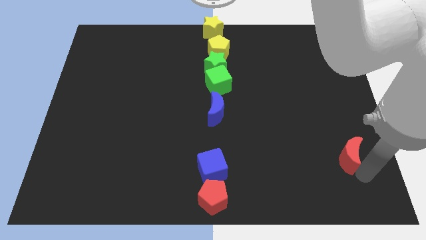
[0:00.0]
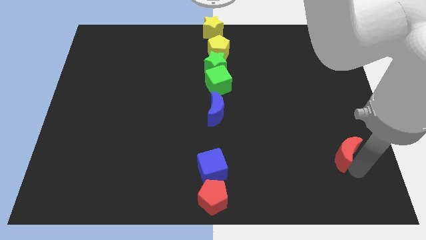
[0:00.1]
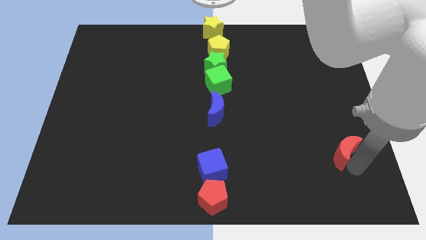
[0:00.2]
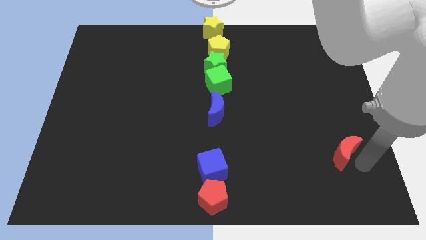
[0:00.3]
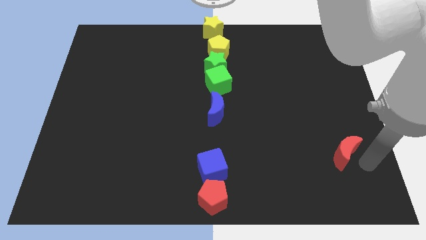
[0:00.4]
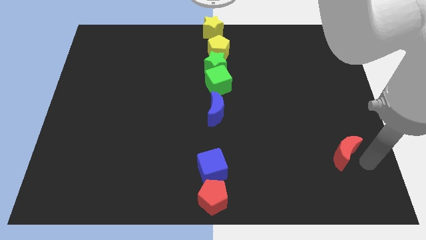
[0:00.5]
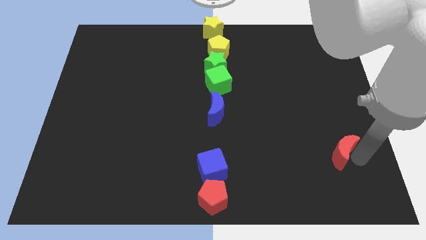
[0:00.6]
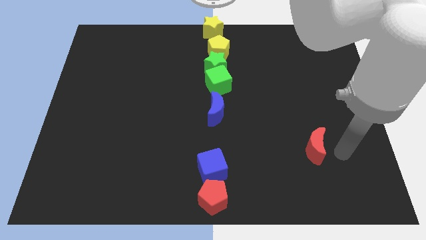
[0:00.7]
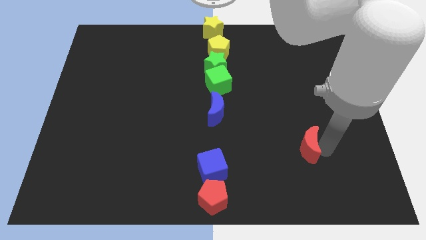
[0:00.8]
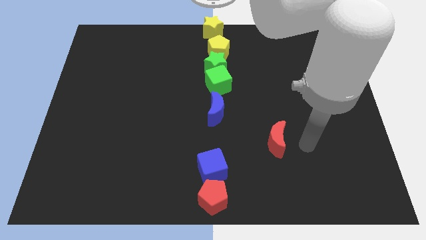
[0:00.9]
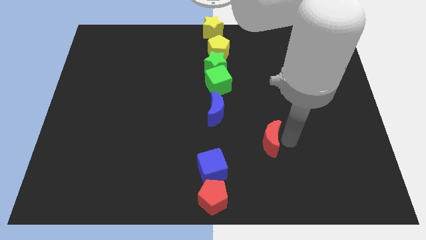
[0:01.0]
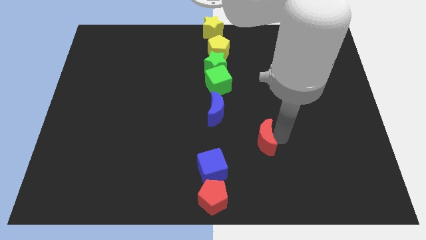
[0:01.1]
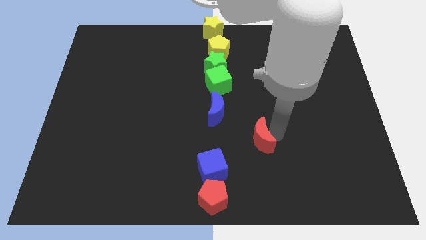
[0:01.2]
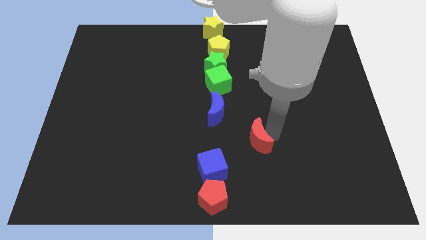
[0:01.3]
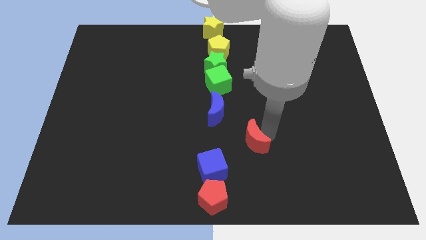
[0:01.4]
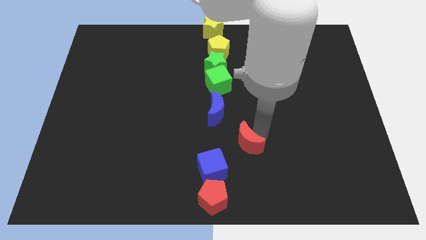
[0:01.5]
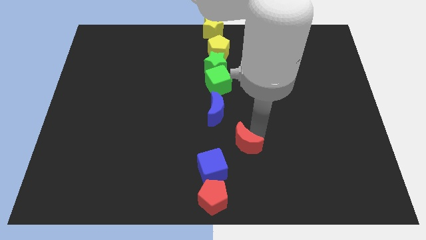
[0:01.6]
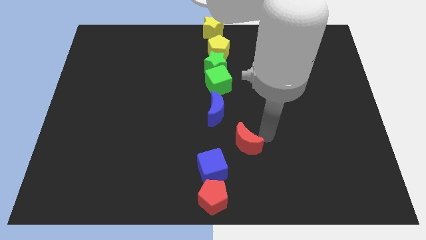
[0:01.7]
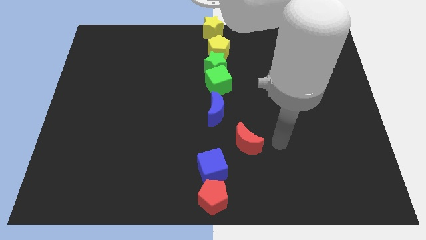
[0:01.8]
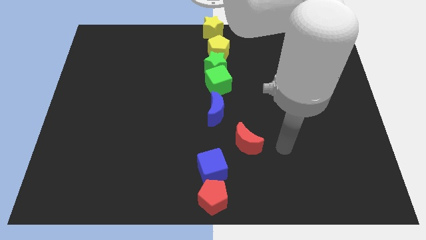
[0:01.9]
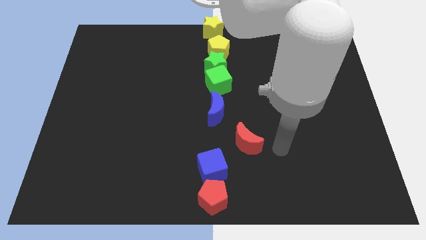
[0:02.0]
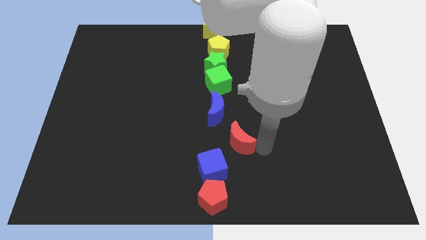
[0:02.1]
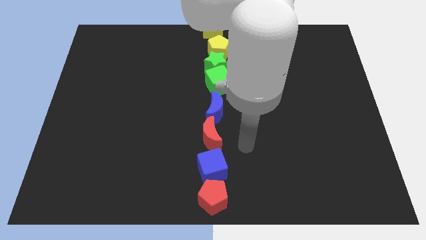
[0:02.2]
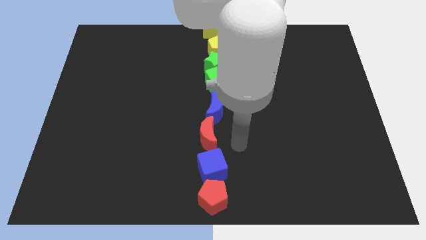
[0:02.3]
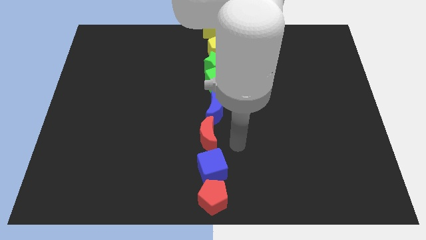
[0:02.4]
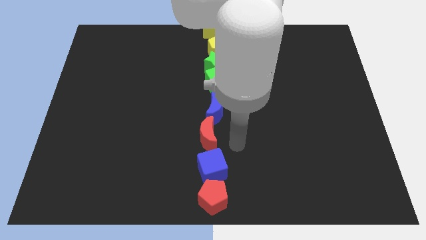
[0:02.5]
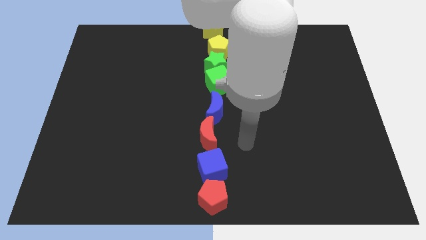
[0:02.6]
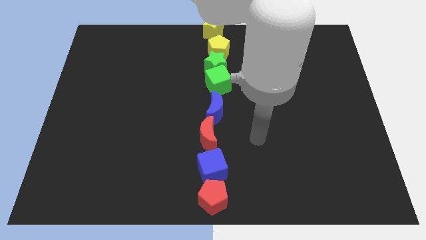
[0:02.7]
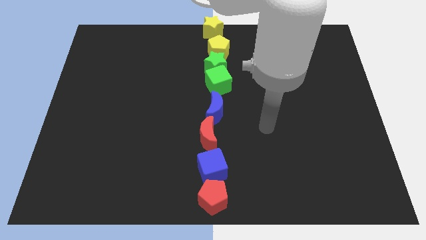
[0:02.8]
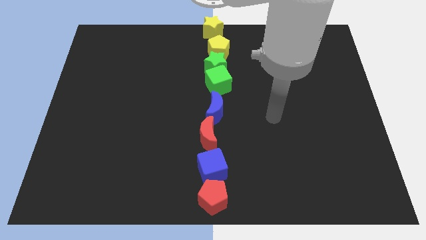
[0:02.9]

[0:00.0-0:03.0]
move the red crescent below the blue crescent

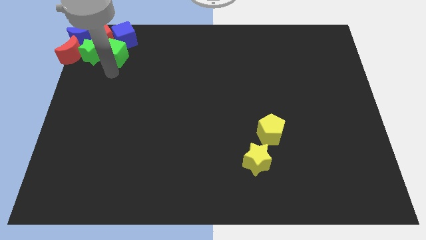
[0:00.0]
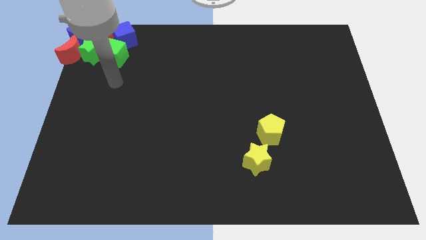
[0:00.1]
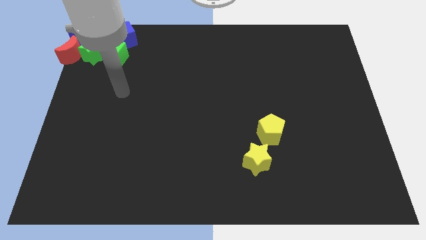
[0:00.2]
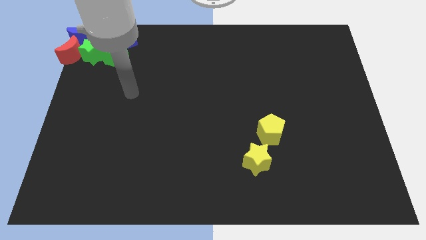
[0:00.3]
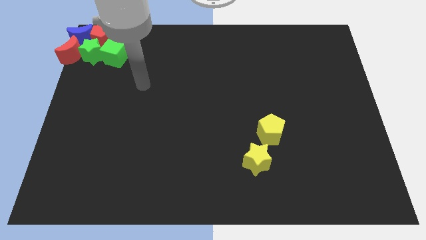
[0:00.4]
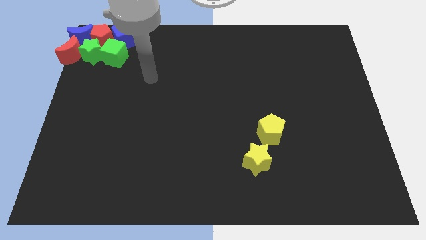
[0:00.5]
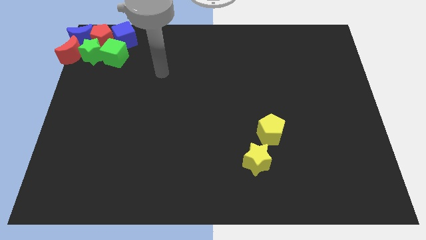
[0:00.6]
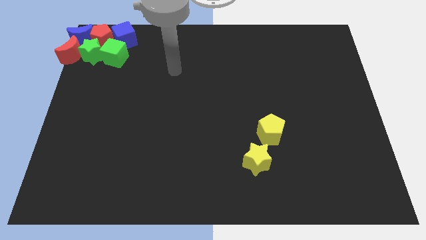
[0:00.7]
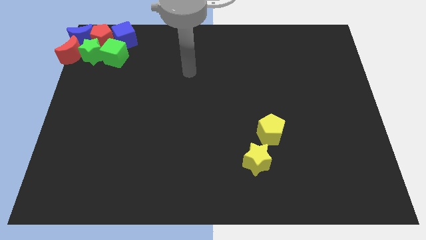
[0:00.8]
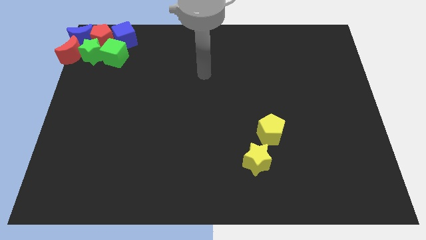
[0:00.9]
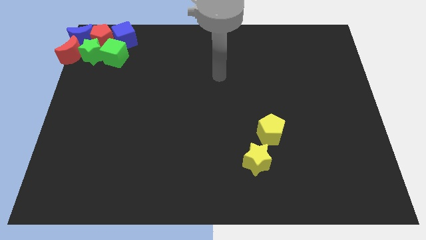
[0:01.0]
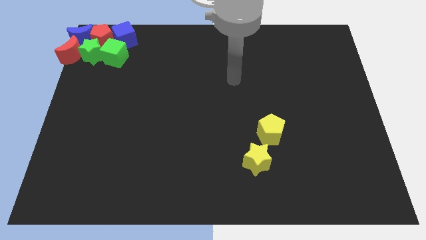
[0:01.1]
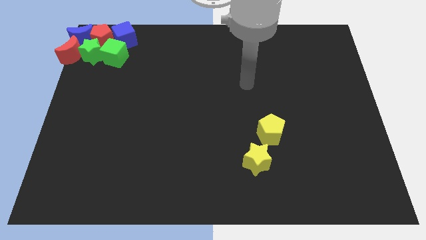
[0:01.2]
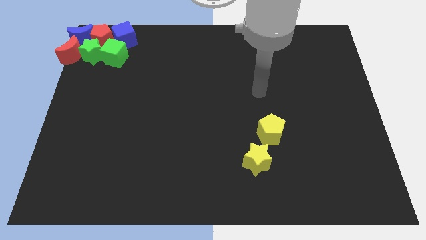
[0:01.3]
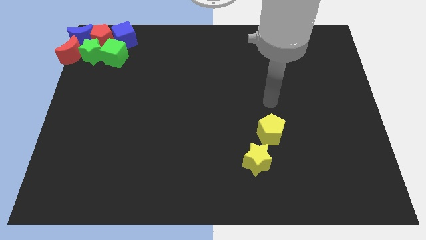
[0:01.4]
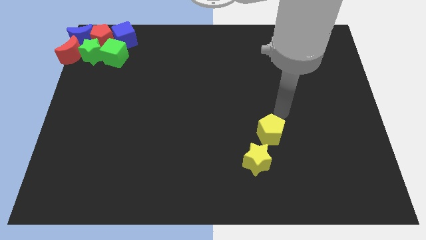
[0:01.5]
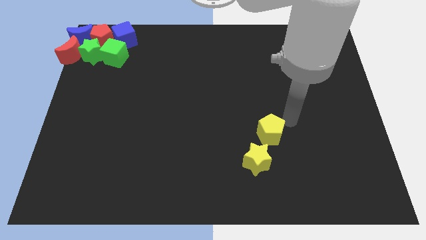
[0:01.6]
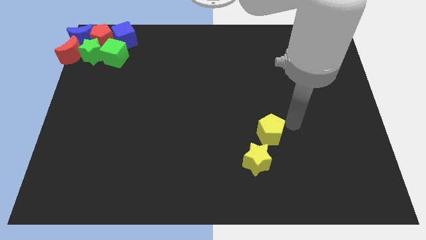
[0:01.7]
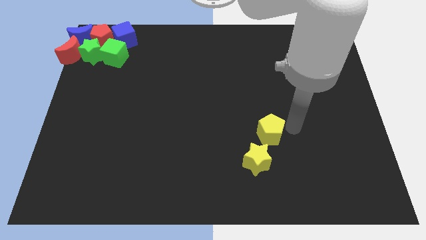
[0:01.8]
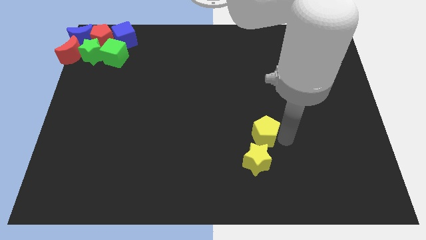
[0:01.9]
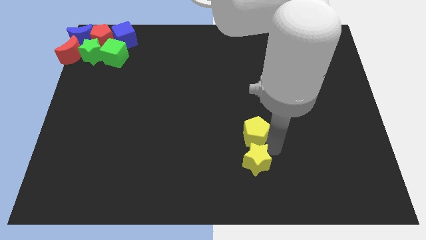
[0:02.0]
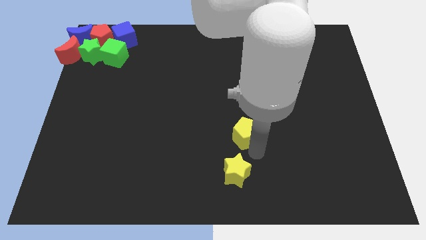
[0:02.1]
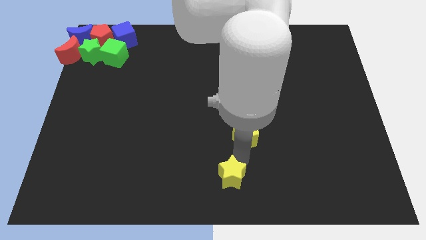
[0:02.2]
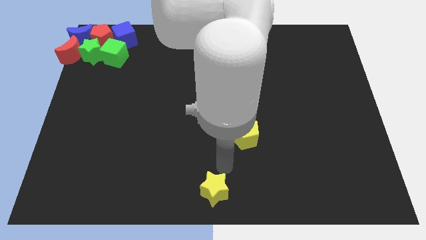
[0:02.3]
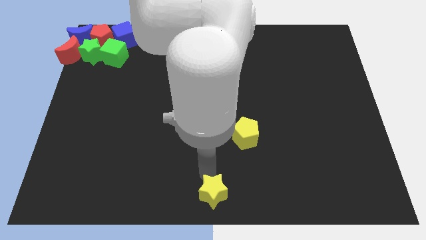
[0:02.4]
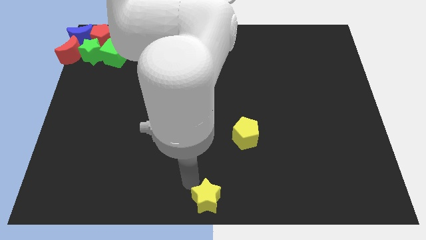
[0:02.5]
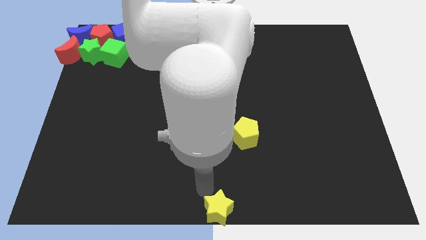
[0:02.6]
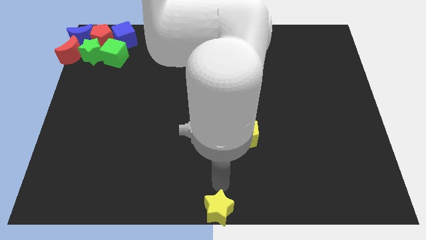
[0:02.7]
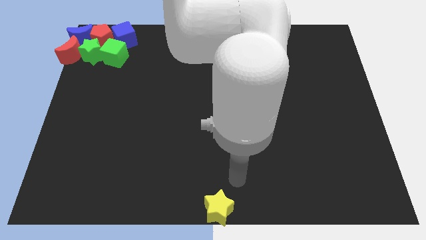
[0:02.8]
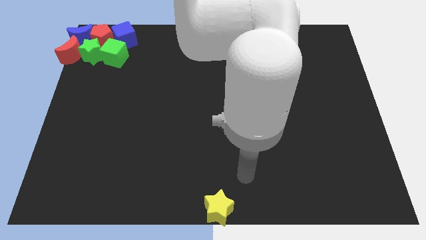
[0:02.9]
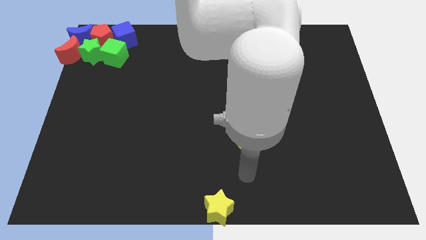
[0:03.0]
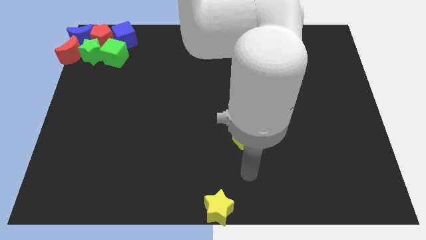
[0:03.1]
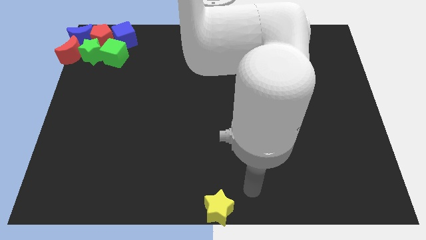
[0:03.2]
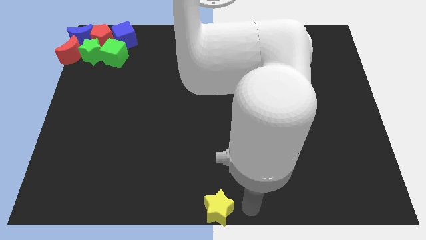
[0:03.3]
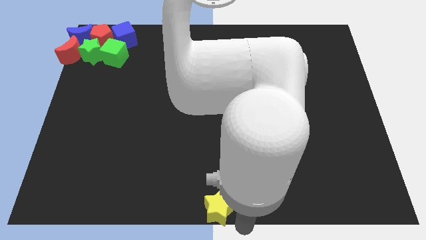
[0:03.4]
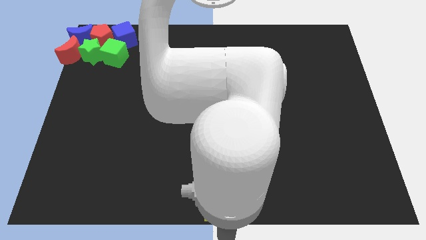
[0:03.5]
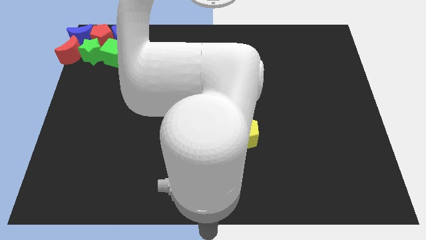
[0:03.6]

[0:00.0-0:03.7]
push the yellow star to the bottom center of the board

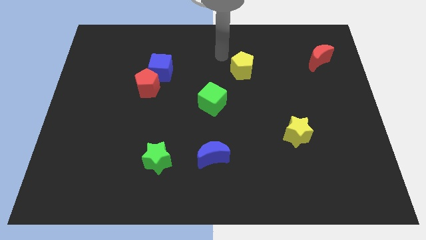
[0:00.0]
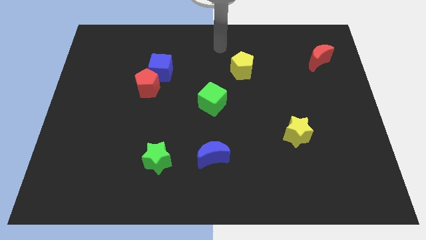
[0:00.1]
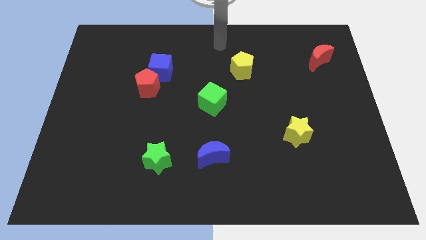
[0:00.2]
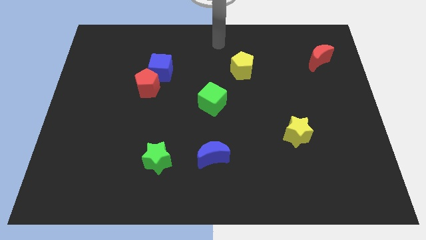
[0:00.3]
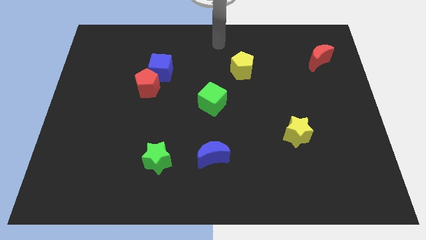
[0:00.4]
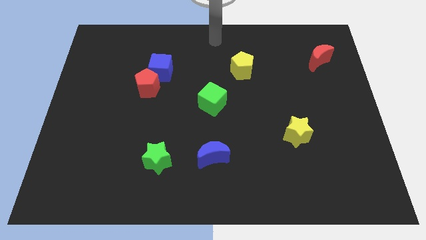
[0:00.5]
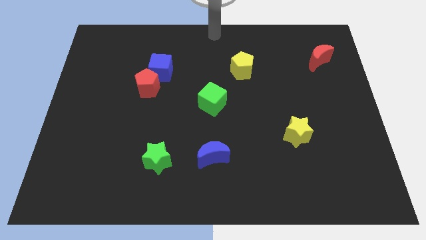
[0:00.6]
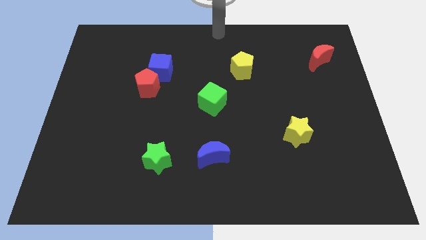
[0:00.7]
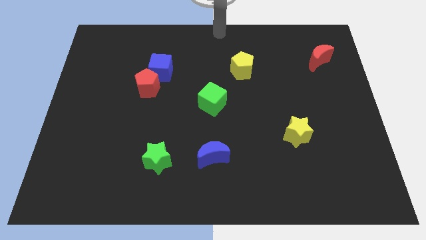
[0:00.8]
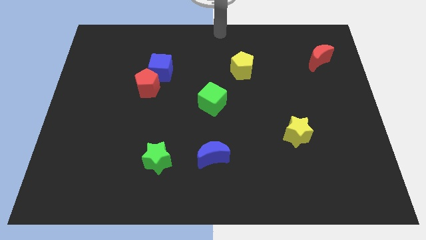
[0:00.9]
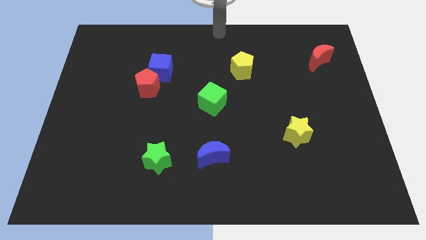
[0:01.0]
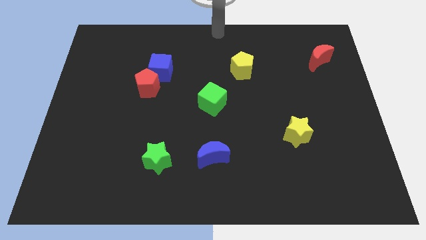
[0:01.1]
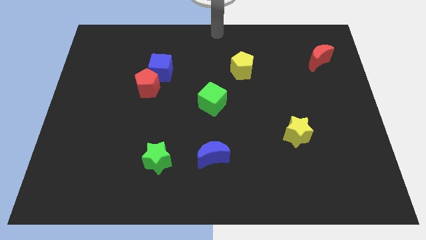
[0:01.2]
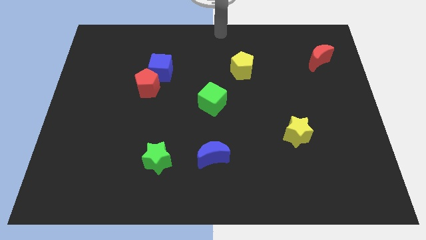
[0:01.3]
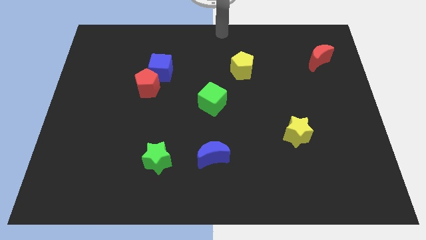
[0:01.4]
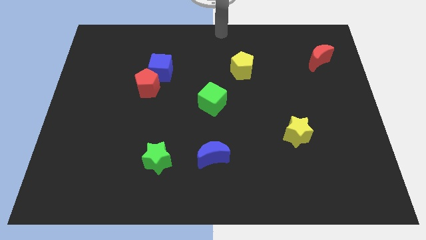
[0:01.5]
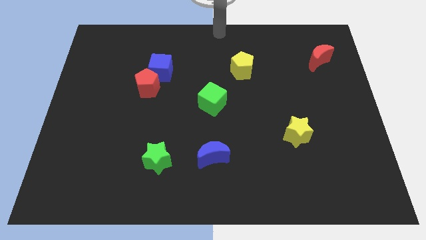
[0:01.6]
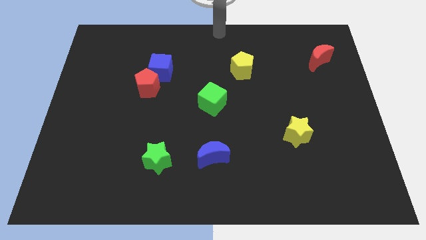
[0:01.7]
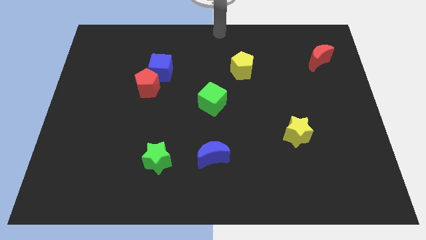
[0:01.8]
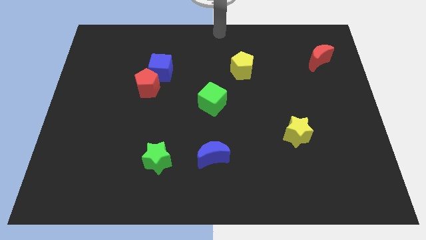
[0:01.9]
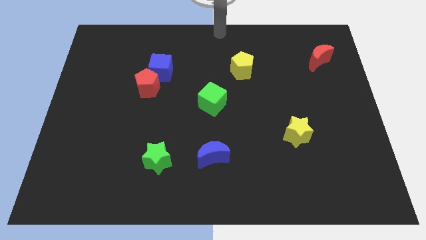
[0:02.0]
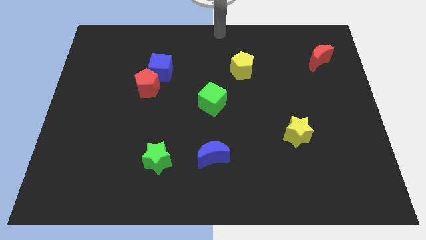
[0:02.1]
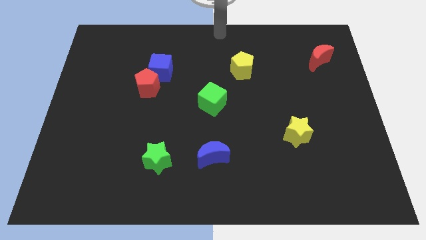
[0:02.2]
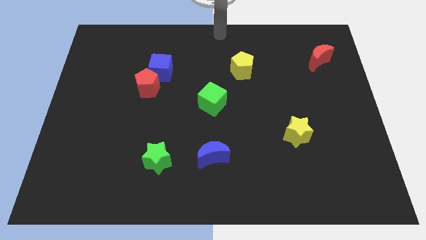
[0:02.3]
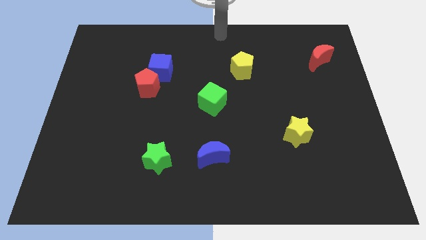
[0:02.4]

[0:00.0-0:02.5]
place your hand at top center of the board
